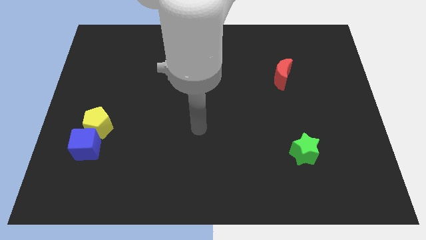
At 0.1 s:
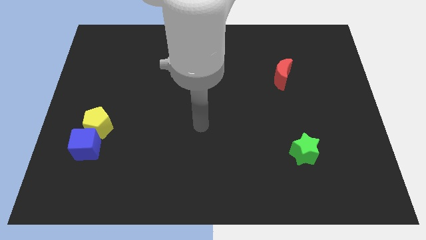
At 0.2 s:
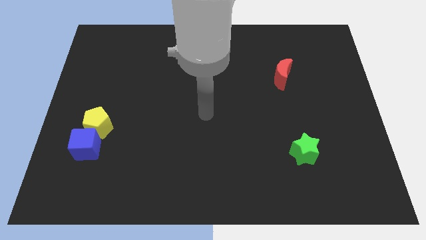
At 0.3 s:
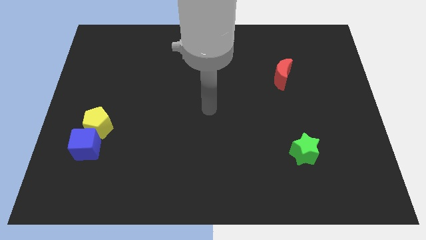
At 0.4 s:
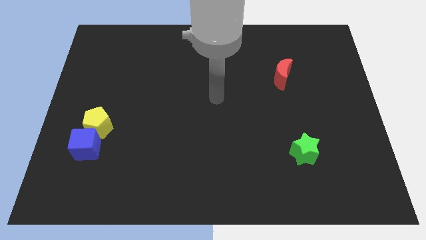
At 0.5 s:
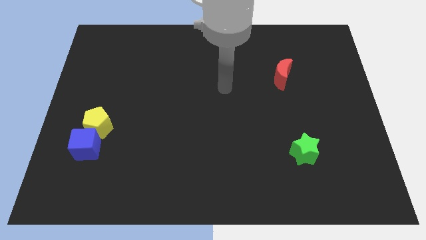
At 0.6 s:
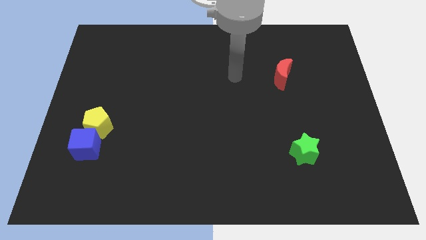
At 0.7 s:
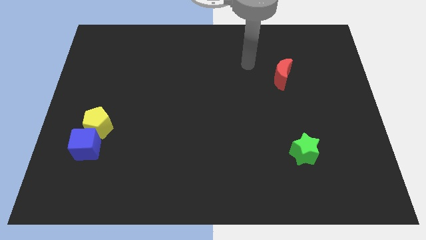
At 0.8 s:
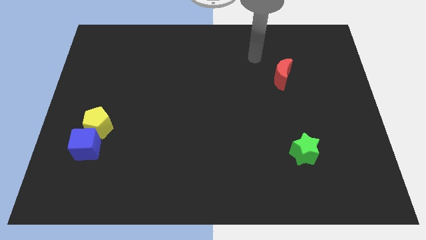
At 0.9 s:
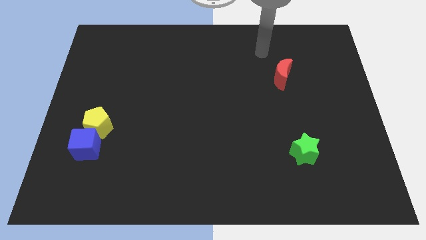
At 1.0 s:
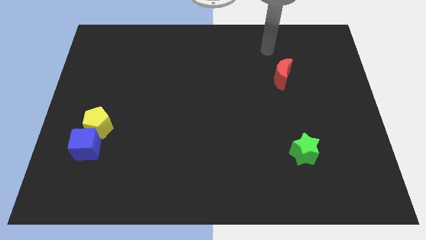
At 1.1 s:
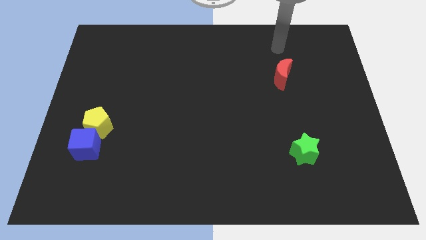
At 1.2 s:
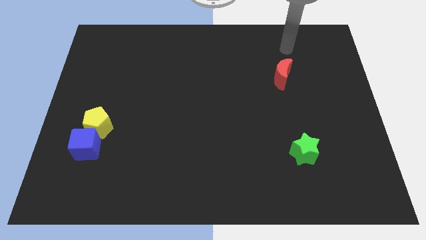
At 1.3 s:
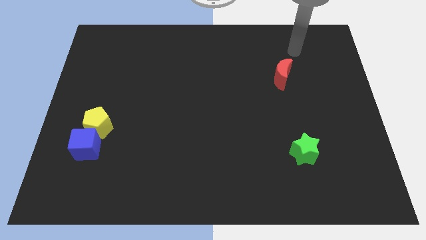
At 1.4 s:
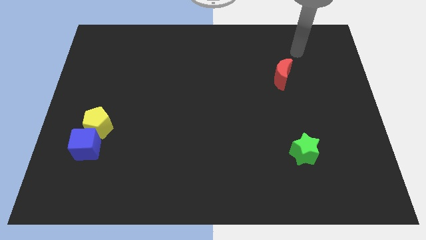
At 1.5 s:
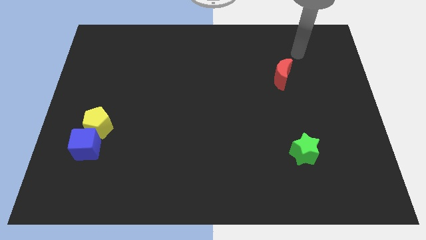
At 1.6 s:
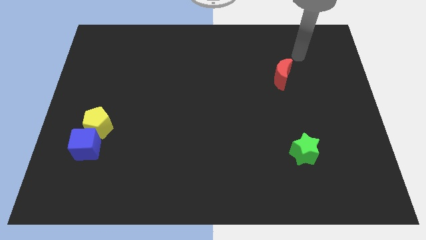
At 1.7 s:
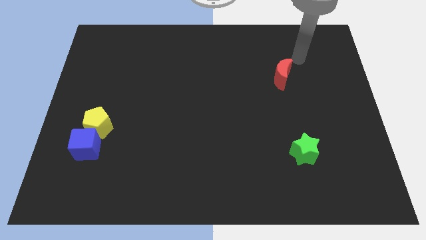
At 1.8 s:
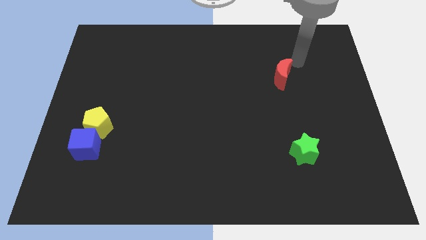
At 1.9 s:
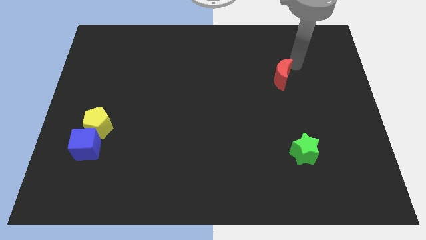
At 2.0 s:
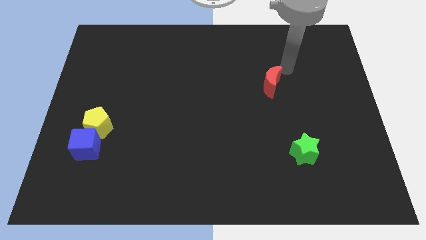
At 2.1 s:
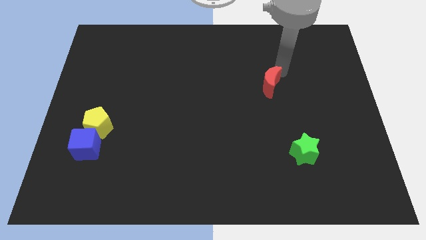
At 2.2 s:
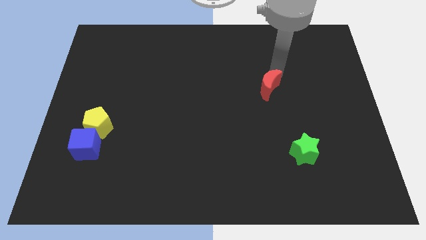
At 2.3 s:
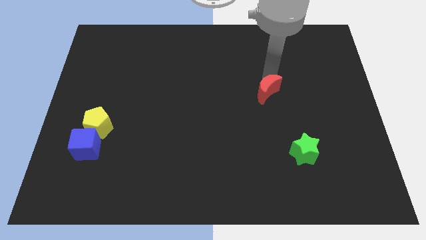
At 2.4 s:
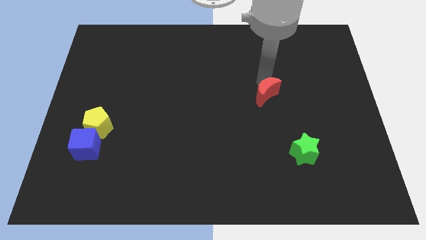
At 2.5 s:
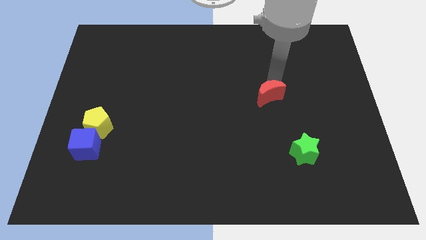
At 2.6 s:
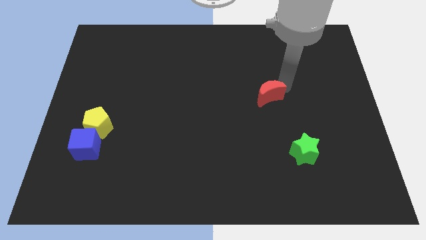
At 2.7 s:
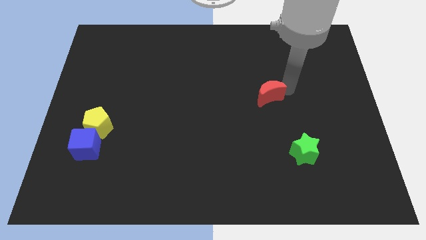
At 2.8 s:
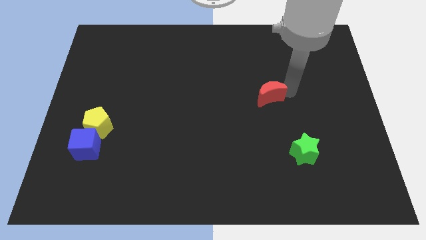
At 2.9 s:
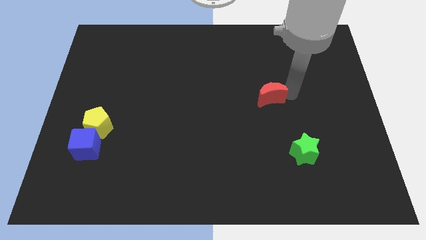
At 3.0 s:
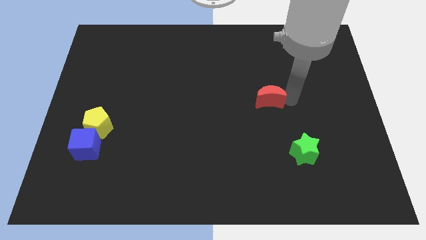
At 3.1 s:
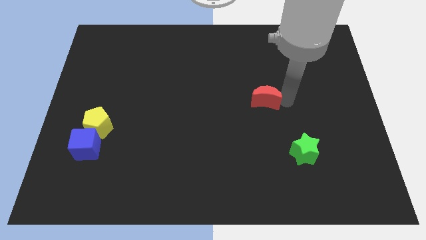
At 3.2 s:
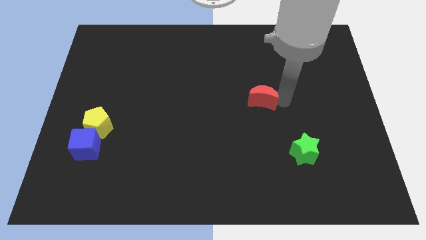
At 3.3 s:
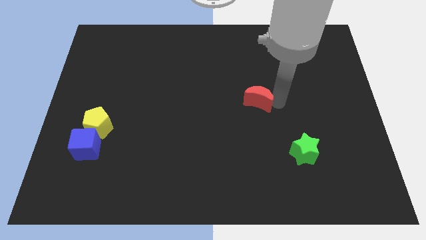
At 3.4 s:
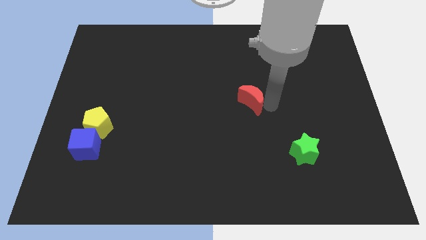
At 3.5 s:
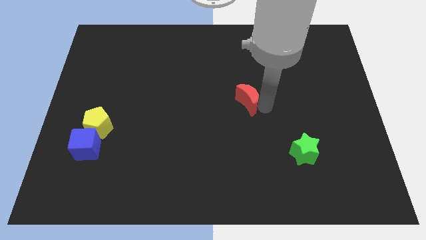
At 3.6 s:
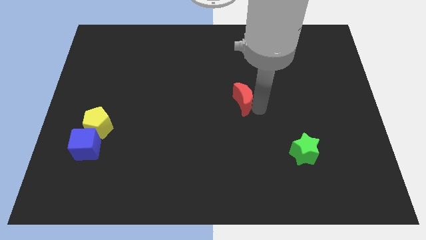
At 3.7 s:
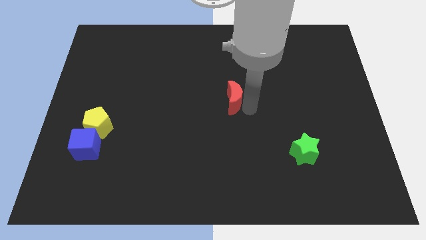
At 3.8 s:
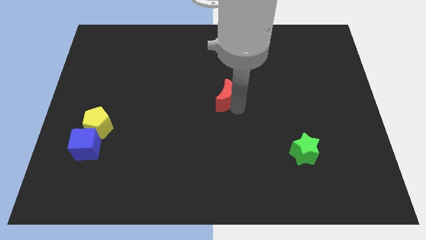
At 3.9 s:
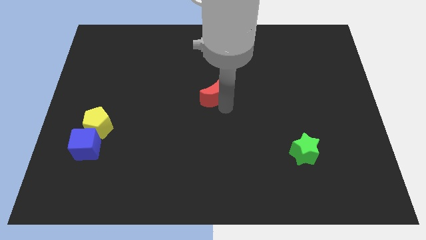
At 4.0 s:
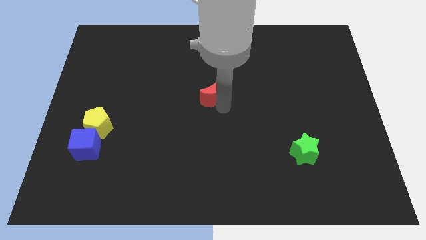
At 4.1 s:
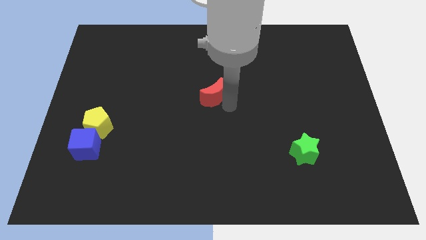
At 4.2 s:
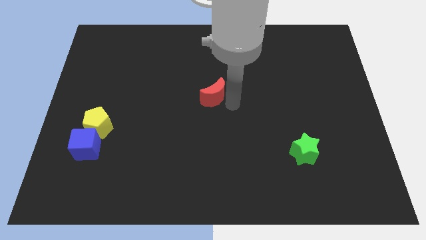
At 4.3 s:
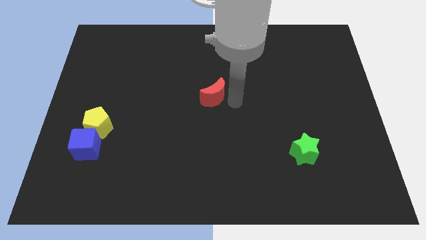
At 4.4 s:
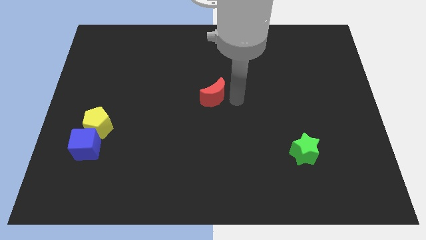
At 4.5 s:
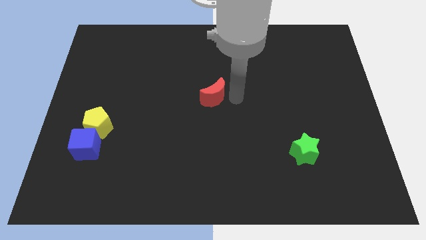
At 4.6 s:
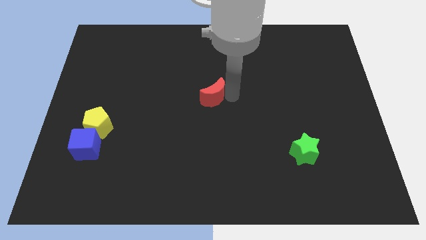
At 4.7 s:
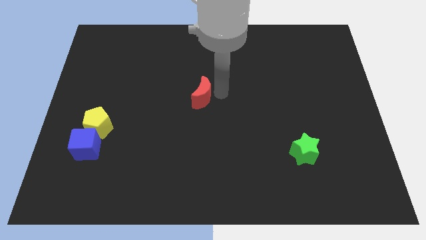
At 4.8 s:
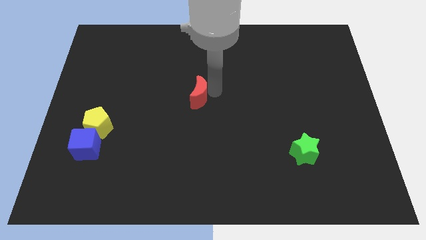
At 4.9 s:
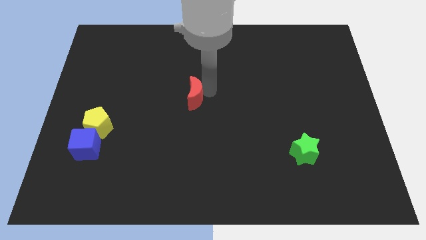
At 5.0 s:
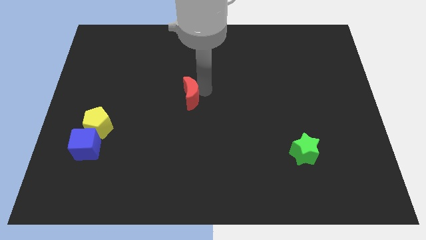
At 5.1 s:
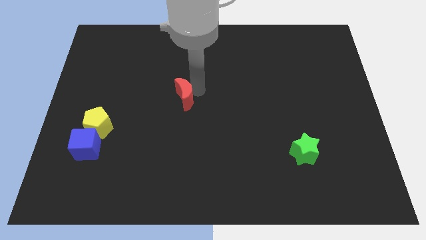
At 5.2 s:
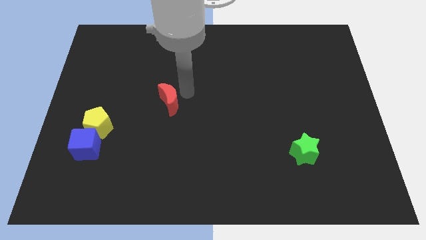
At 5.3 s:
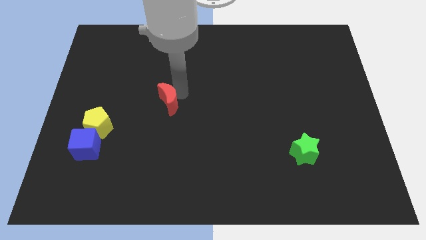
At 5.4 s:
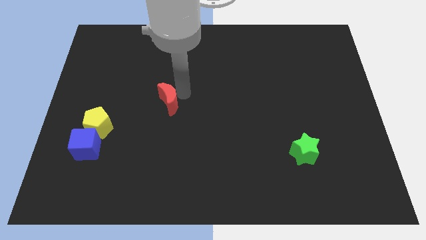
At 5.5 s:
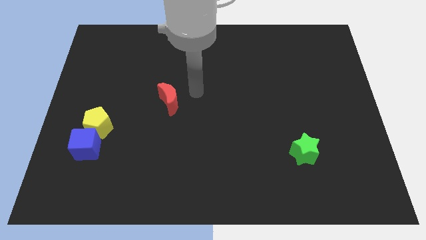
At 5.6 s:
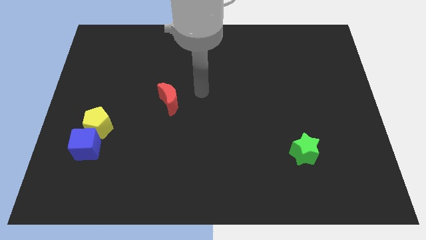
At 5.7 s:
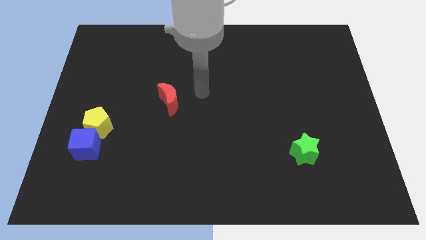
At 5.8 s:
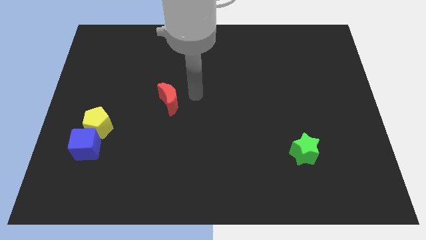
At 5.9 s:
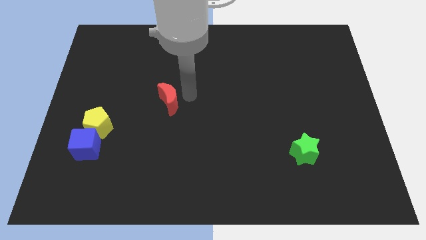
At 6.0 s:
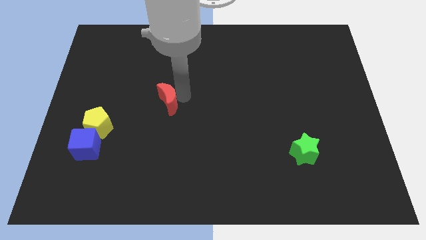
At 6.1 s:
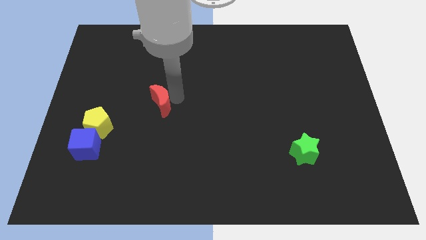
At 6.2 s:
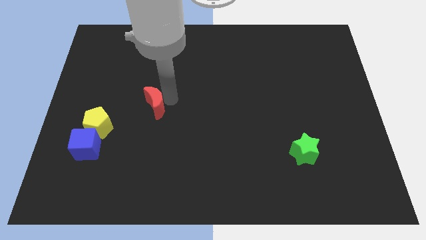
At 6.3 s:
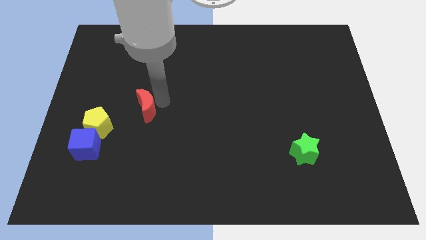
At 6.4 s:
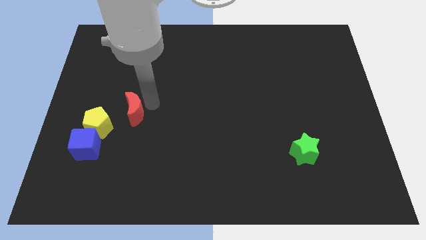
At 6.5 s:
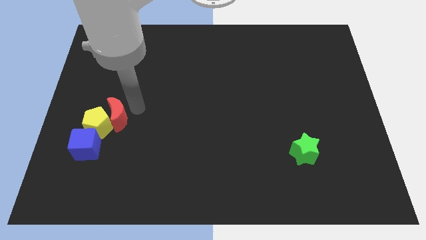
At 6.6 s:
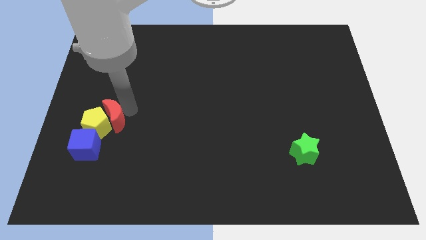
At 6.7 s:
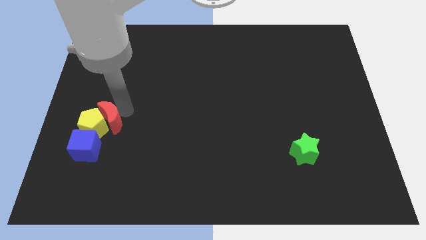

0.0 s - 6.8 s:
push the red moon to the yellow pentagon

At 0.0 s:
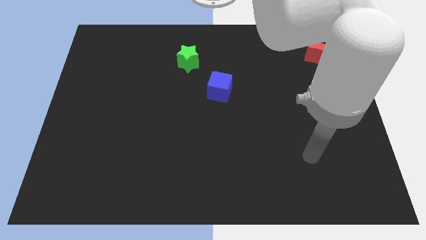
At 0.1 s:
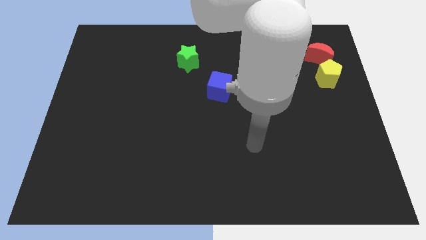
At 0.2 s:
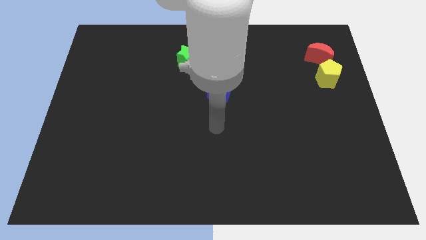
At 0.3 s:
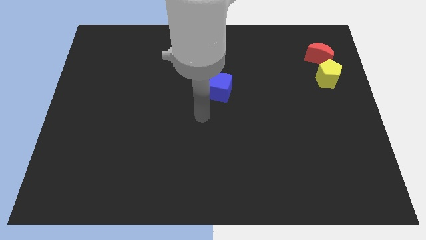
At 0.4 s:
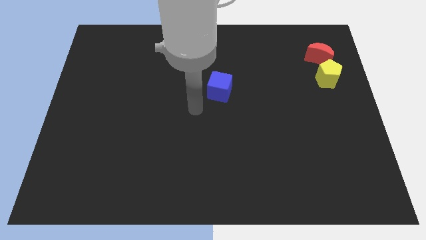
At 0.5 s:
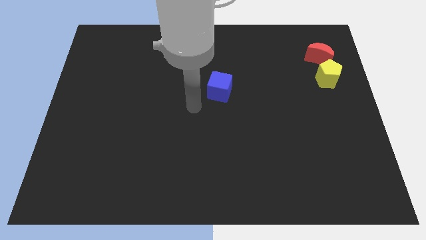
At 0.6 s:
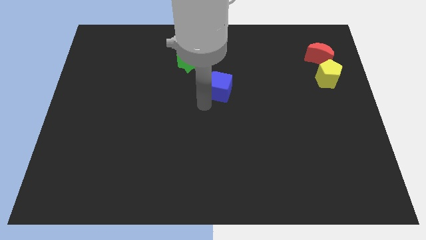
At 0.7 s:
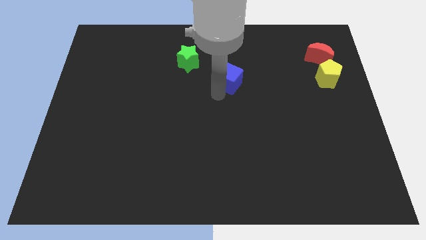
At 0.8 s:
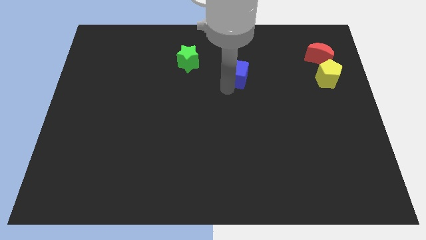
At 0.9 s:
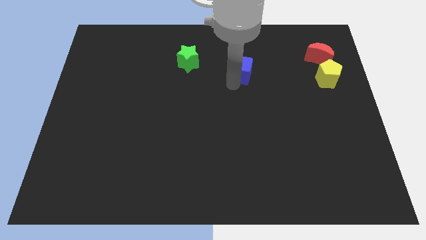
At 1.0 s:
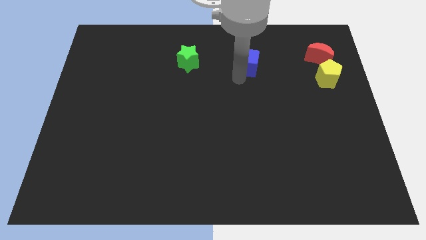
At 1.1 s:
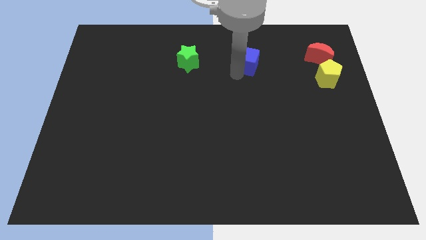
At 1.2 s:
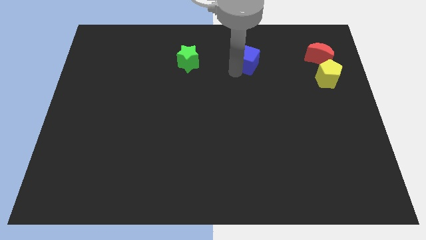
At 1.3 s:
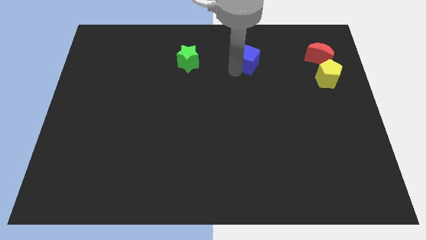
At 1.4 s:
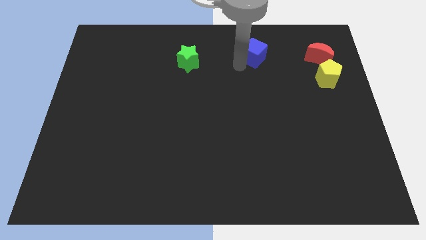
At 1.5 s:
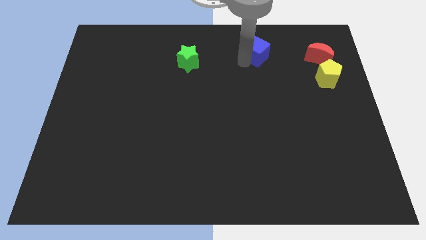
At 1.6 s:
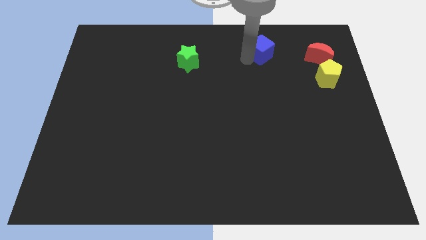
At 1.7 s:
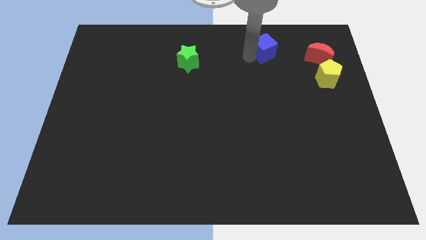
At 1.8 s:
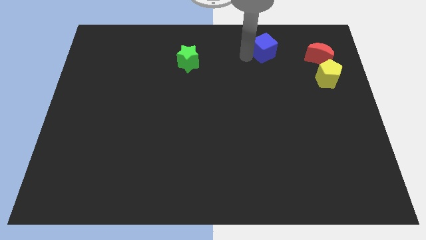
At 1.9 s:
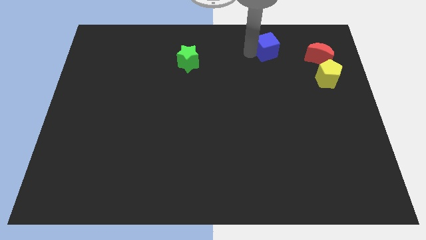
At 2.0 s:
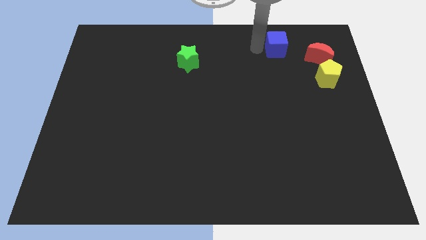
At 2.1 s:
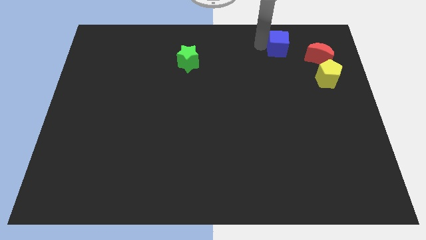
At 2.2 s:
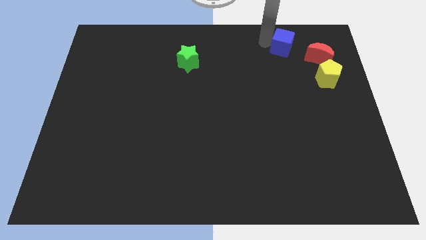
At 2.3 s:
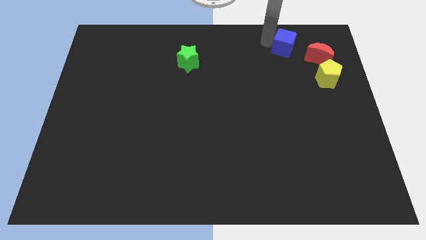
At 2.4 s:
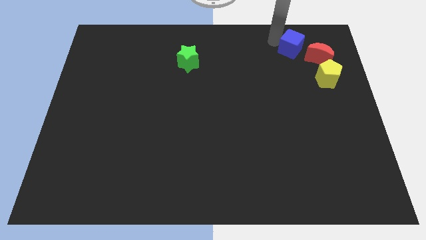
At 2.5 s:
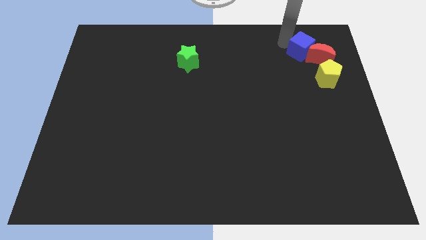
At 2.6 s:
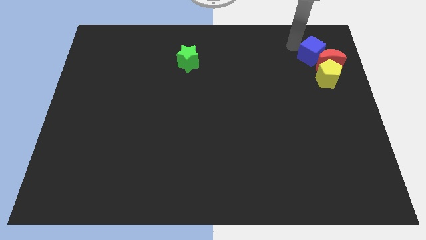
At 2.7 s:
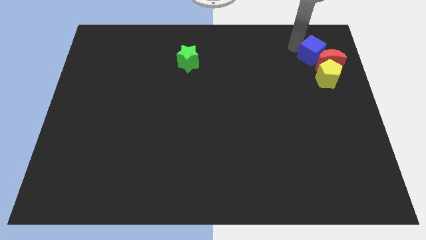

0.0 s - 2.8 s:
push the blue block close to the red block
